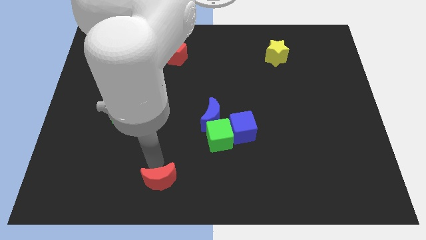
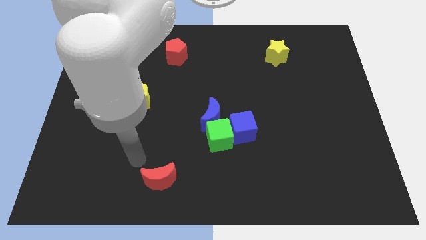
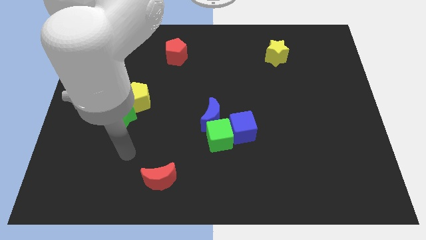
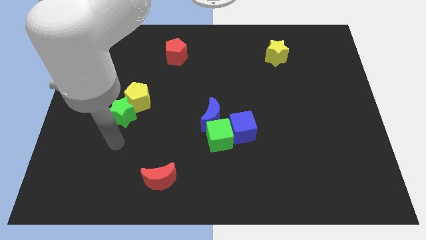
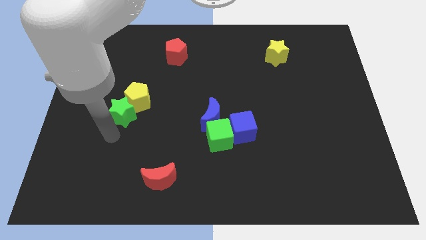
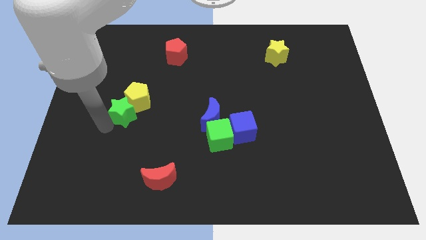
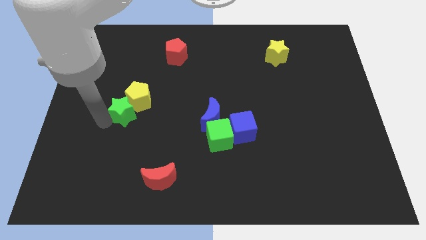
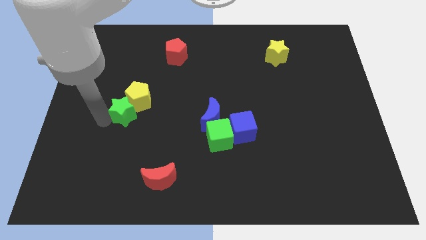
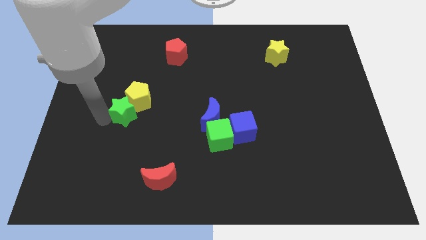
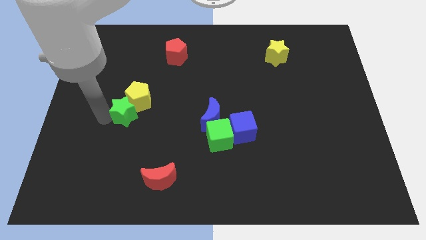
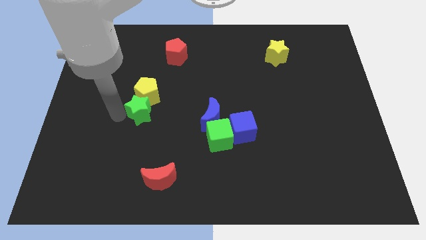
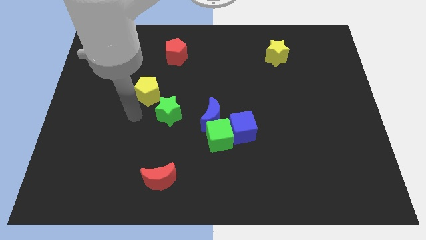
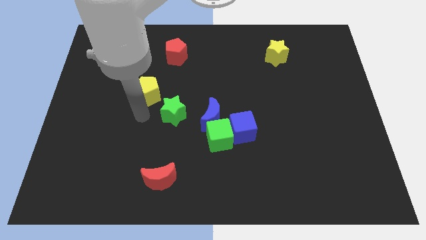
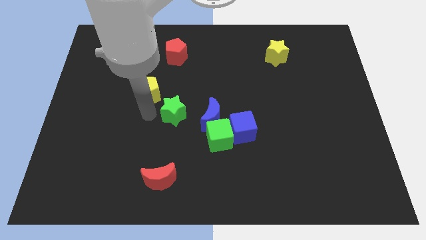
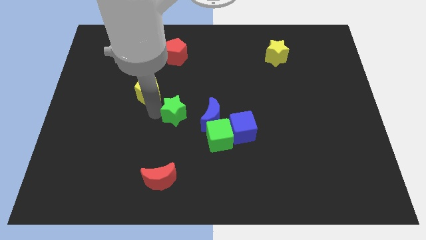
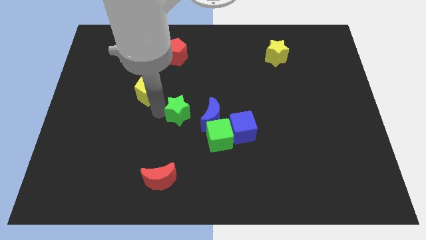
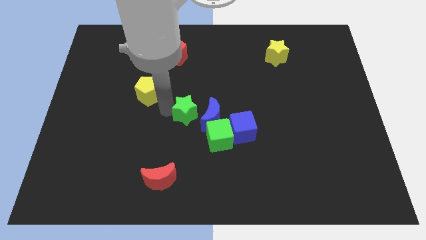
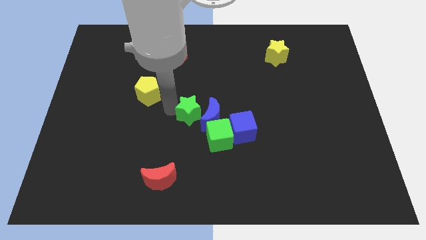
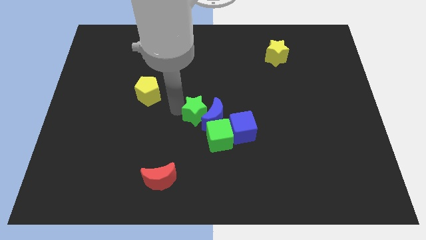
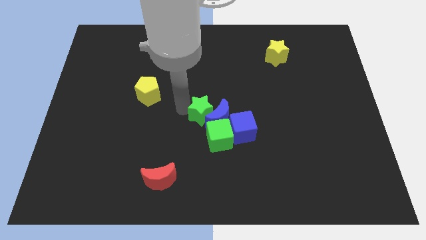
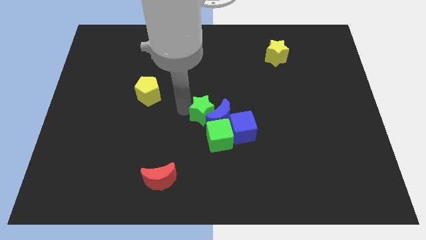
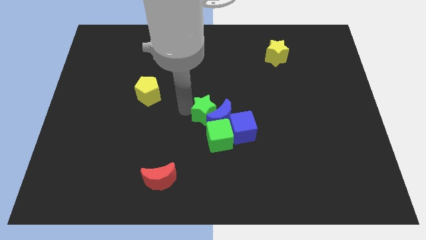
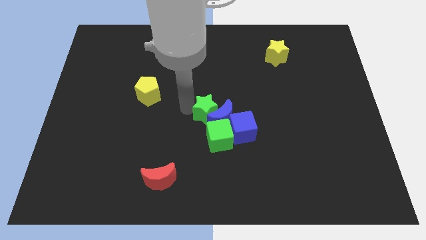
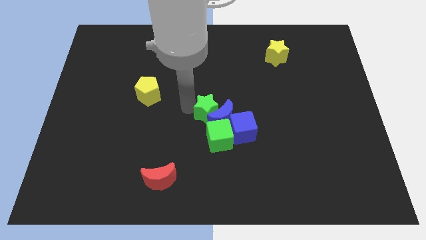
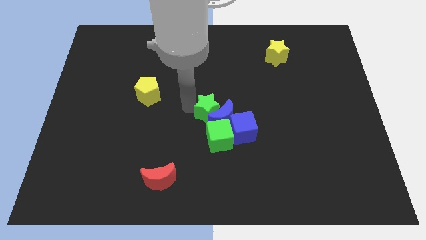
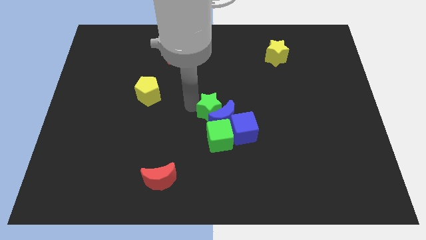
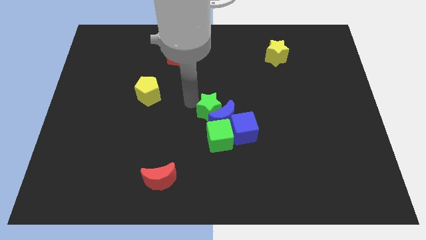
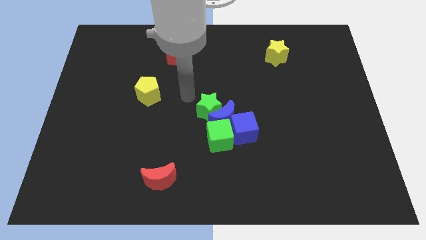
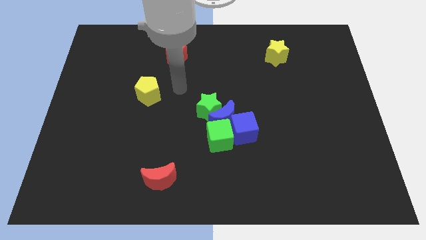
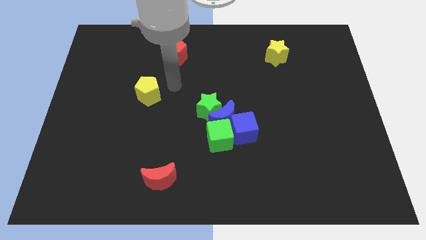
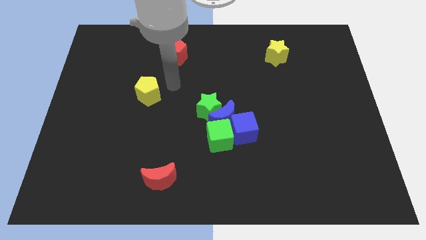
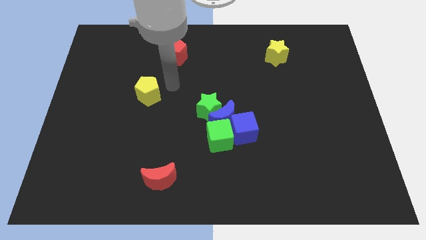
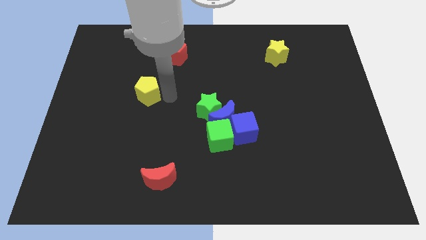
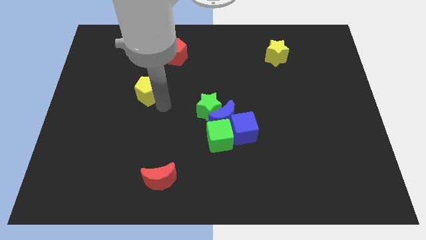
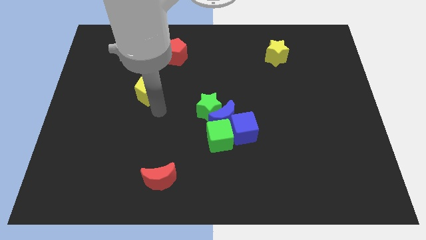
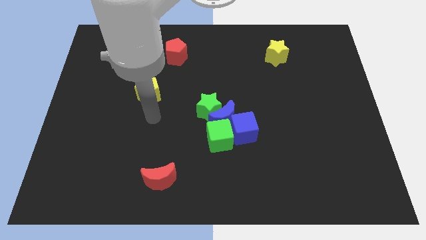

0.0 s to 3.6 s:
separate the green star from the yellow pentagon

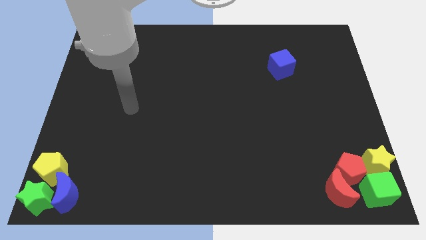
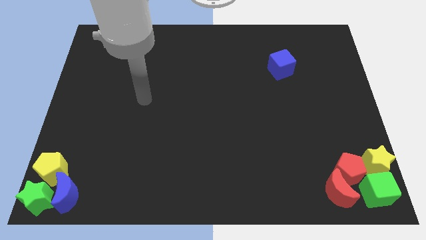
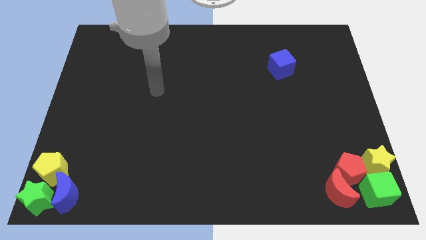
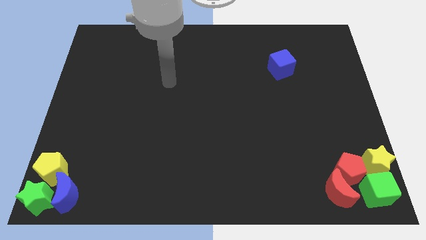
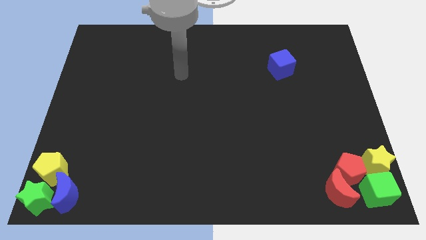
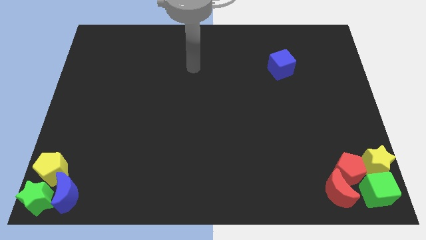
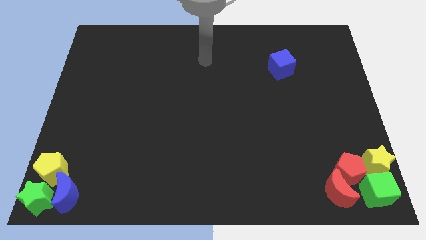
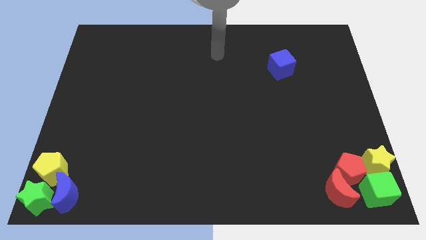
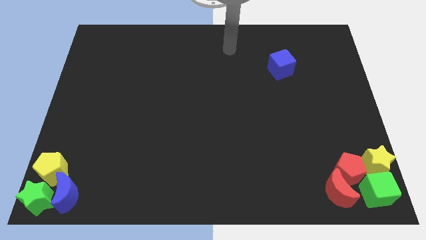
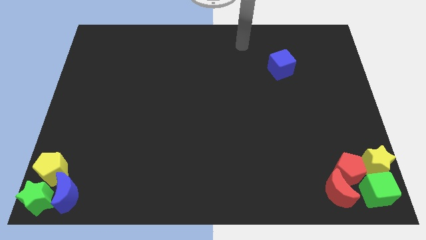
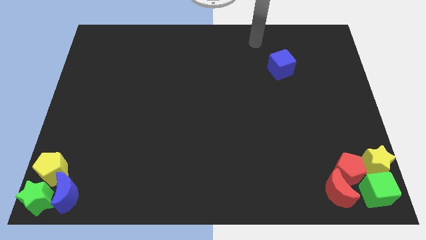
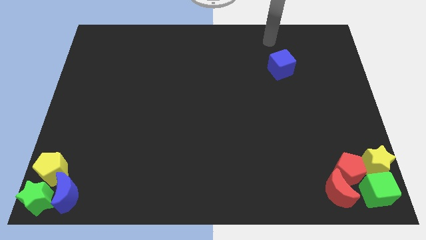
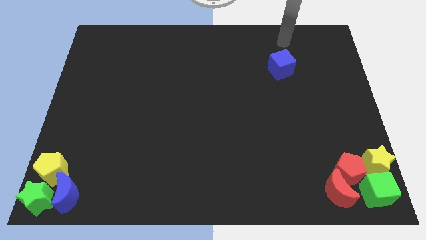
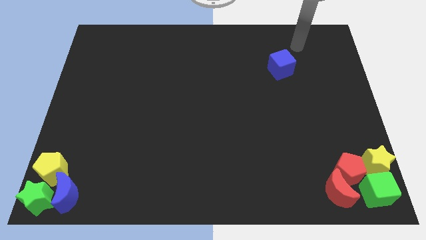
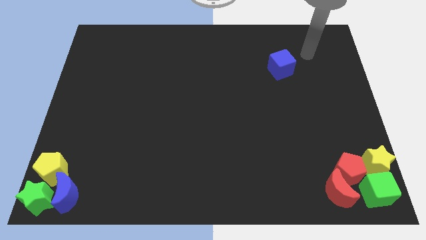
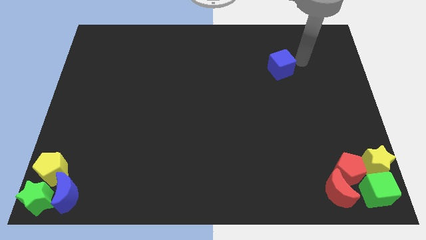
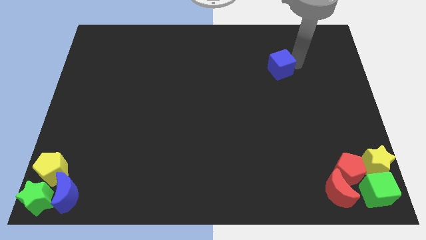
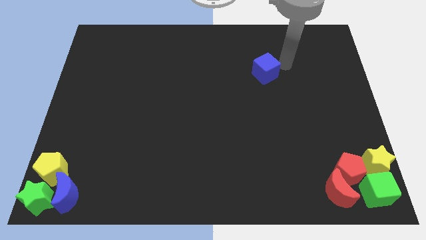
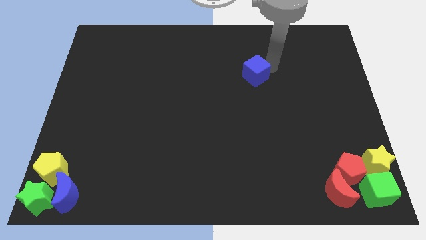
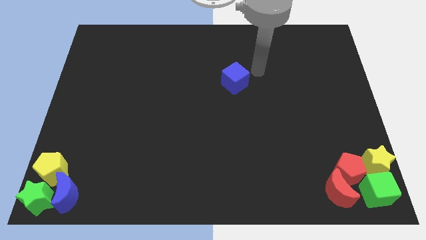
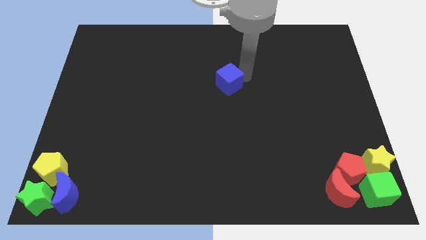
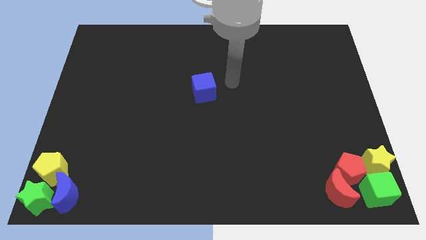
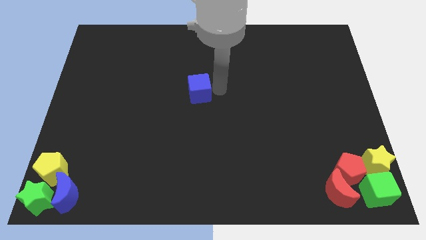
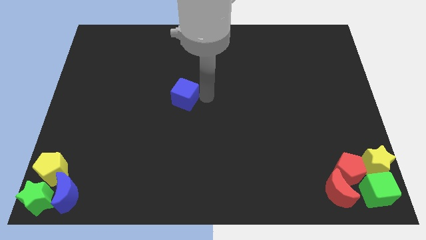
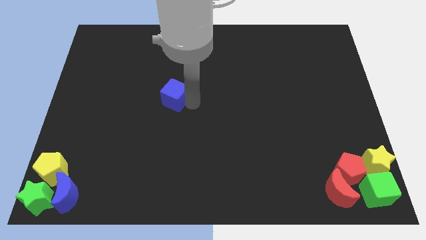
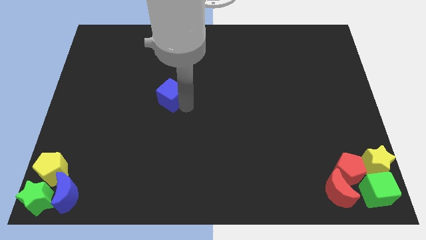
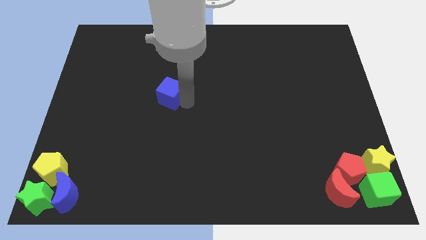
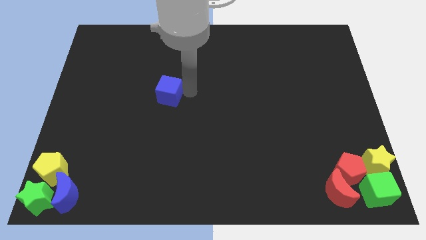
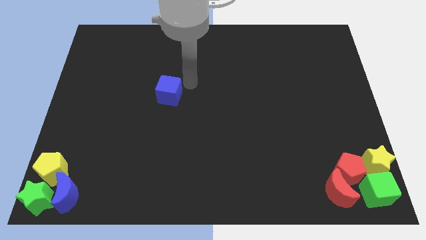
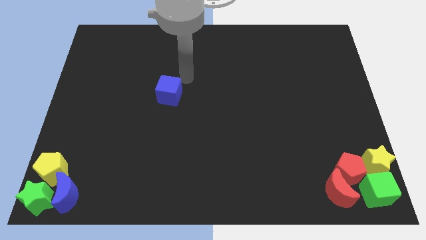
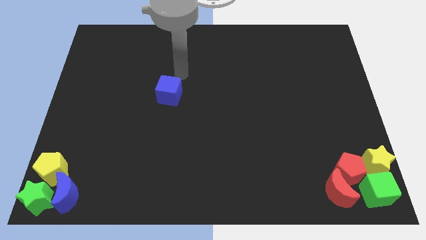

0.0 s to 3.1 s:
push the blue cube to the left side

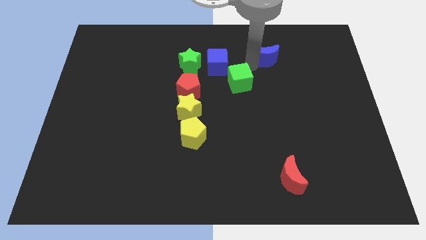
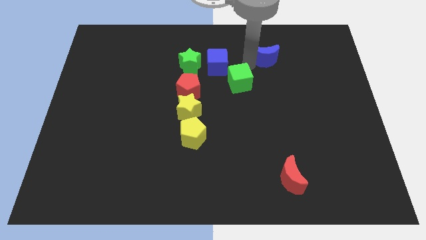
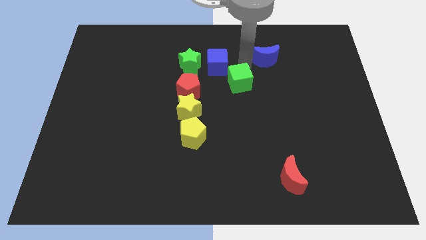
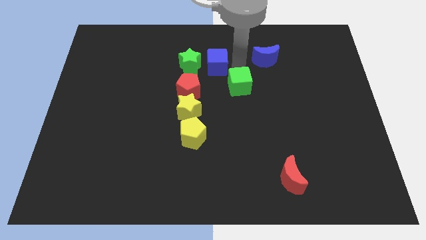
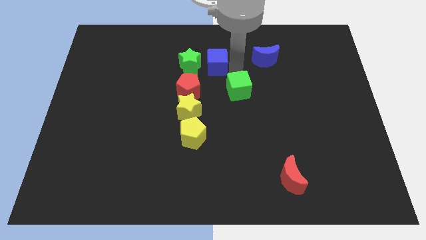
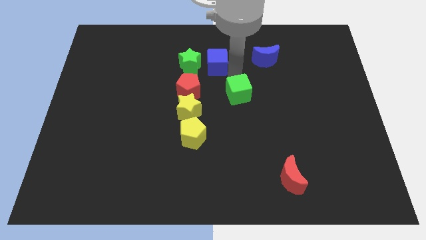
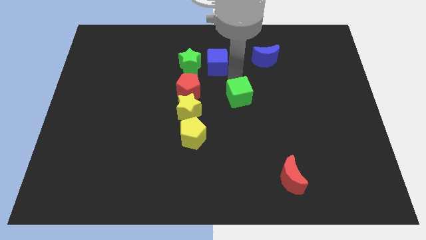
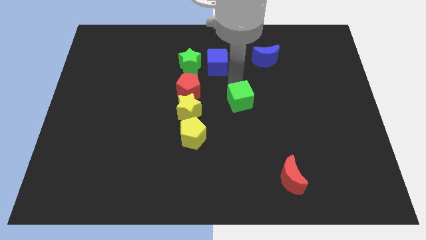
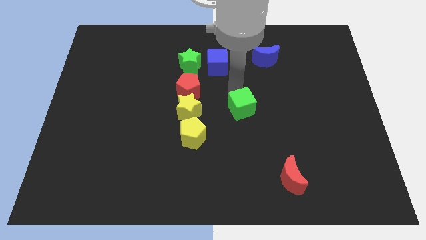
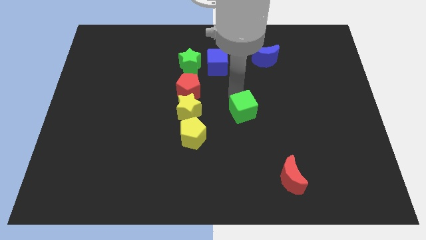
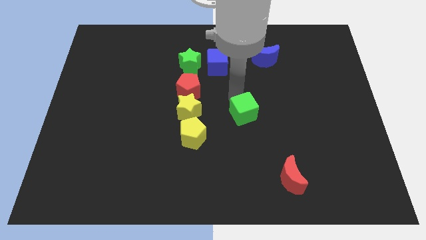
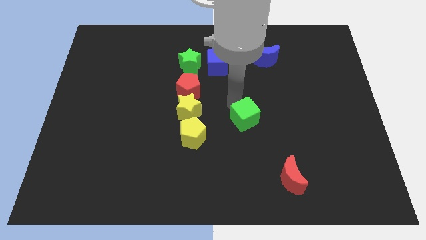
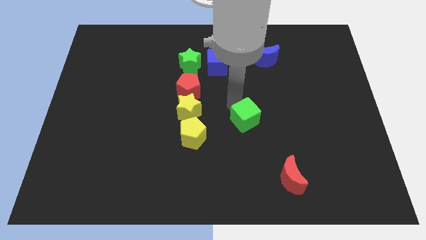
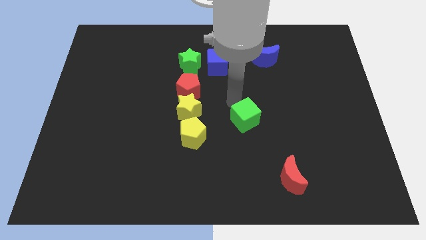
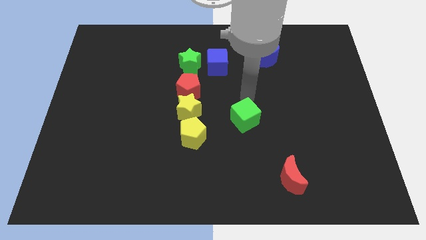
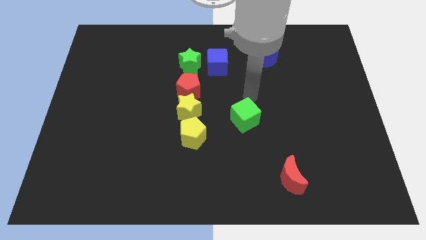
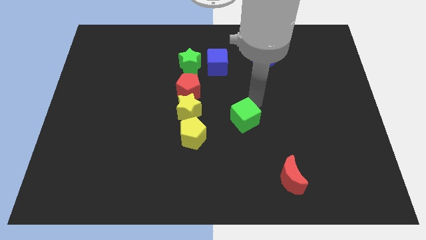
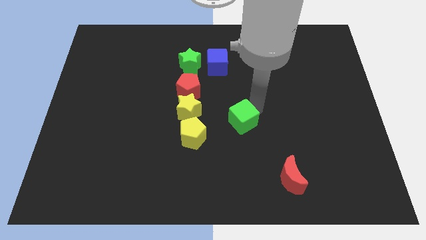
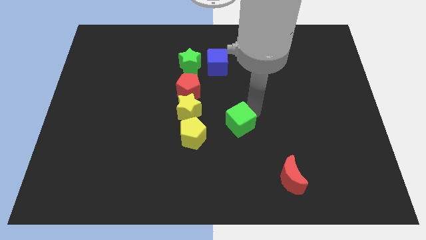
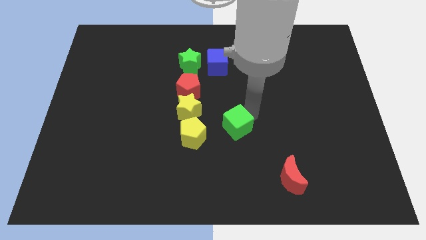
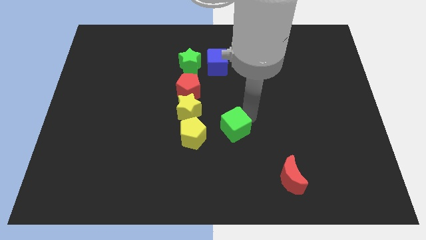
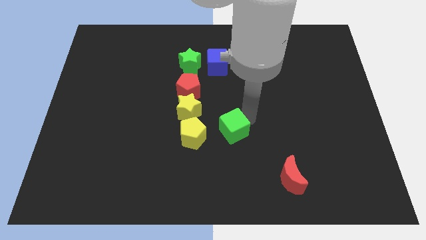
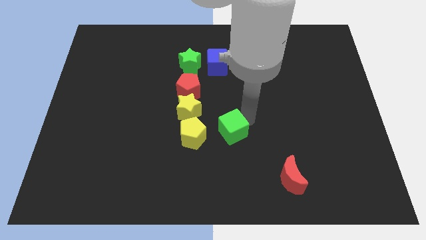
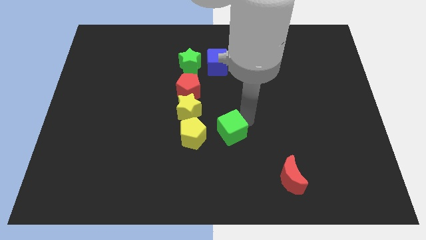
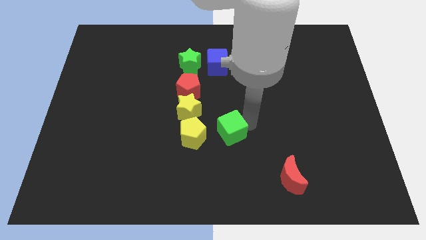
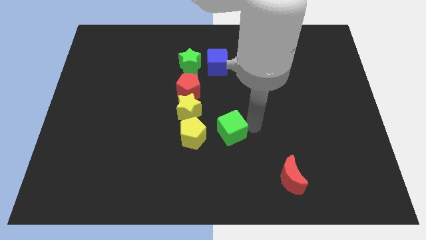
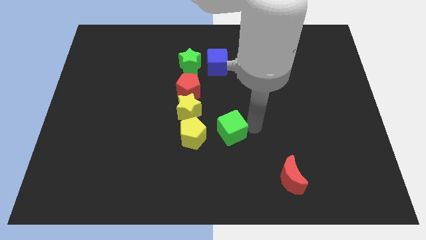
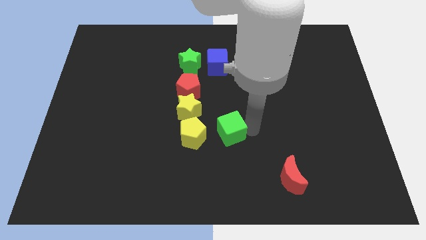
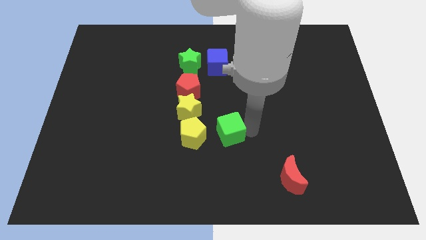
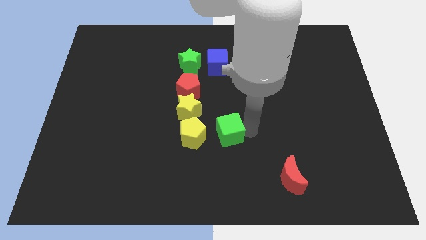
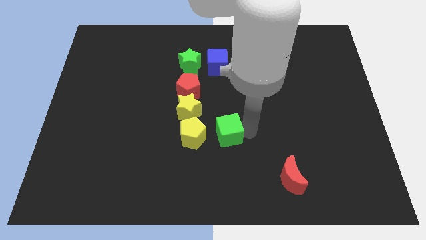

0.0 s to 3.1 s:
put green cube to the right of yellow pentagon
